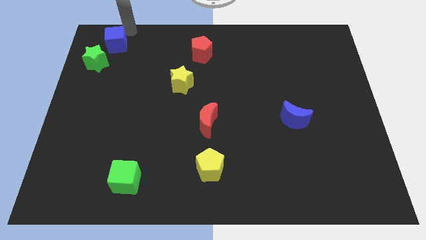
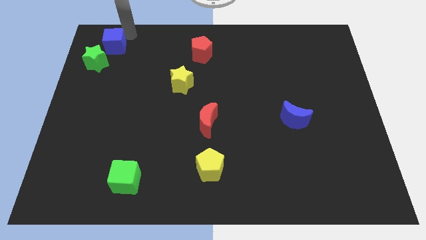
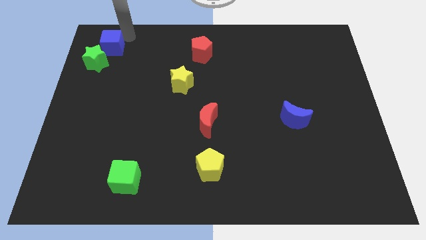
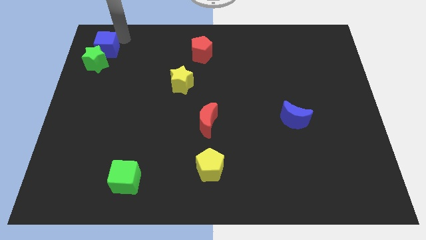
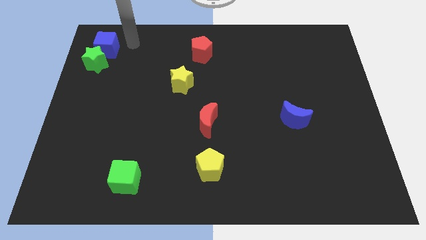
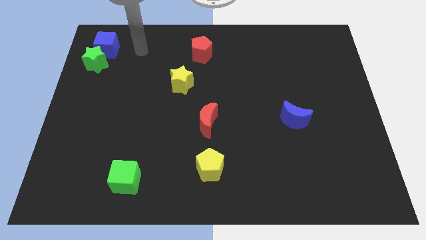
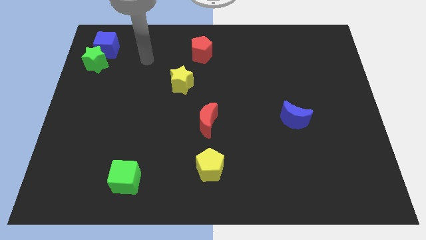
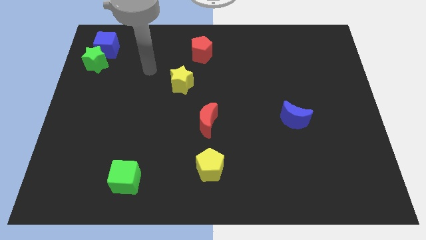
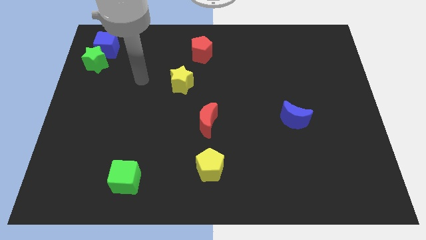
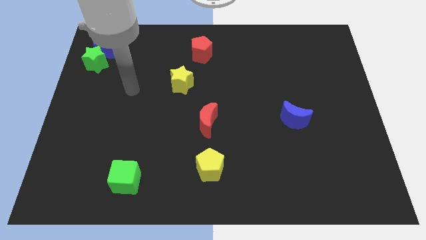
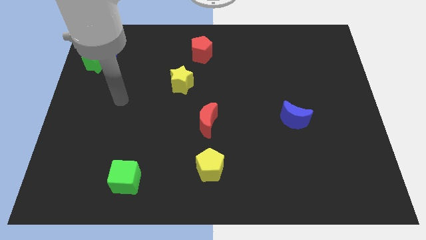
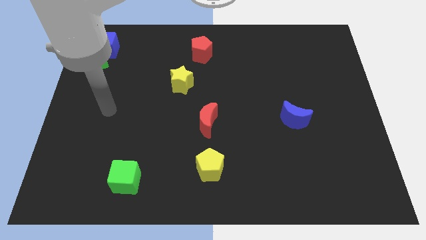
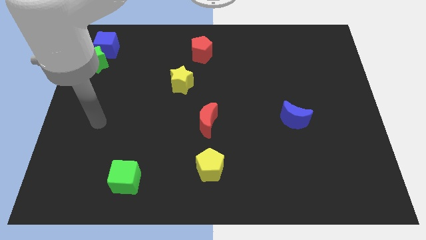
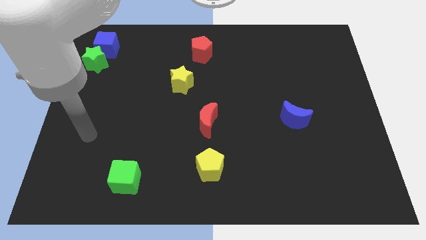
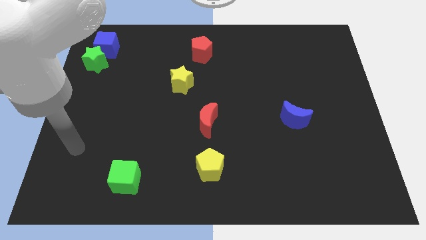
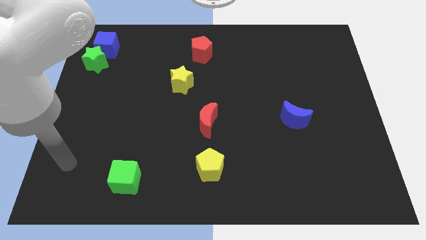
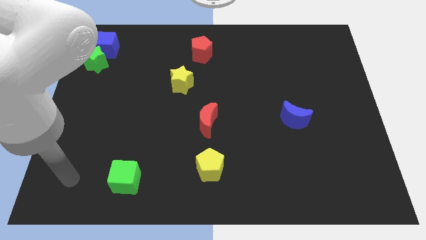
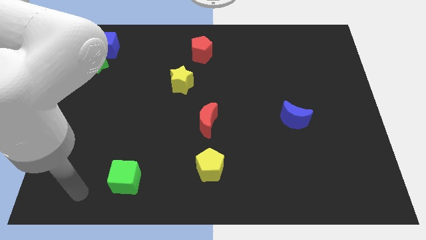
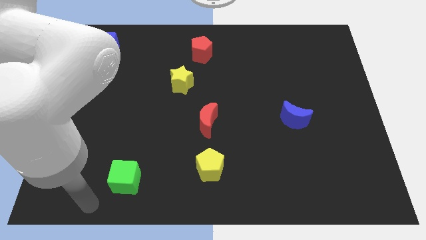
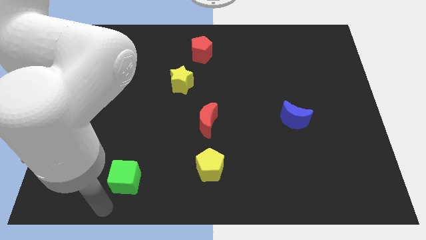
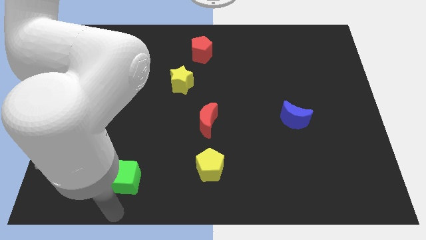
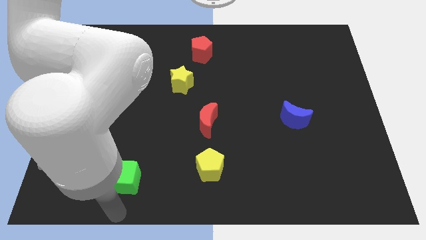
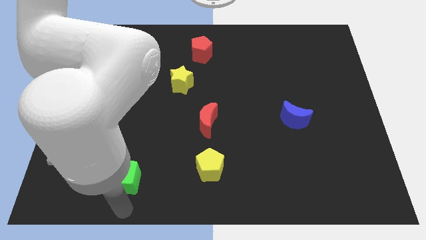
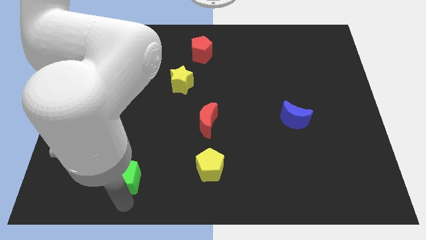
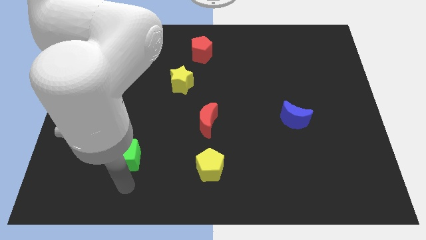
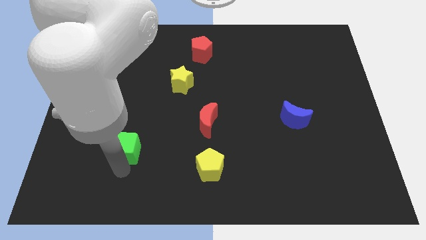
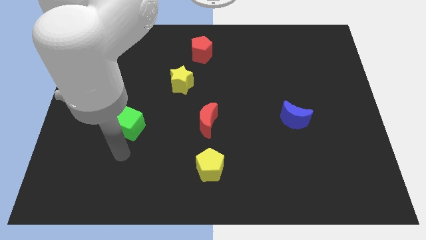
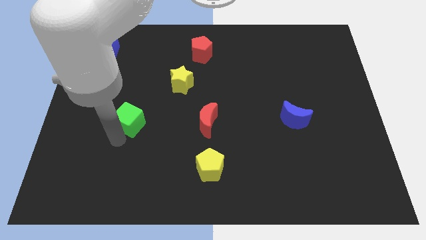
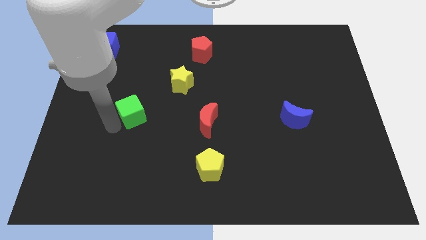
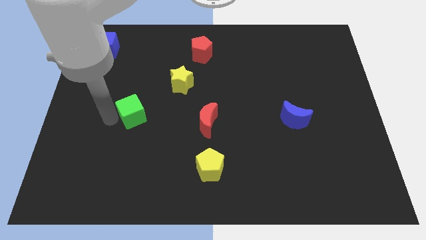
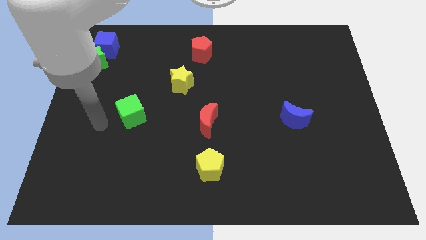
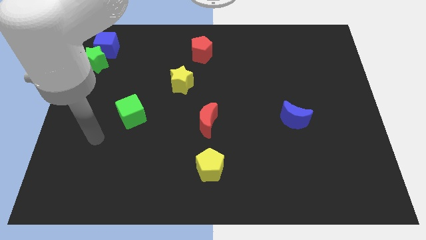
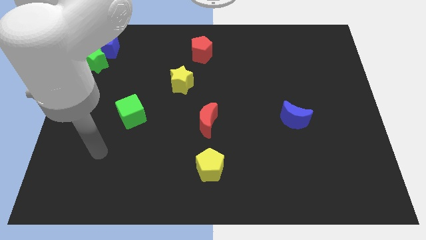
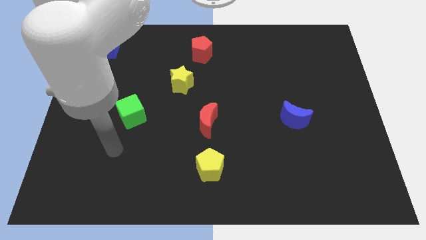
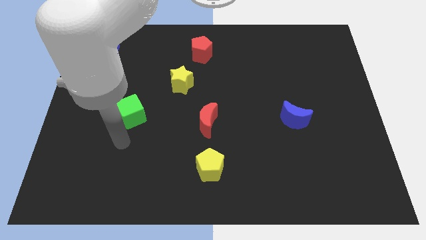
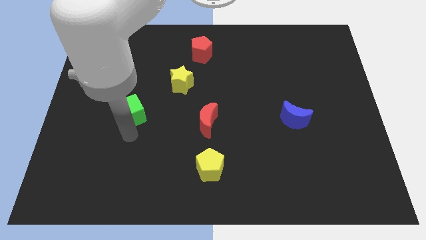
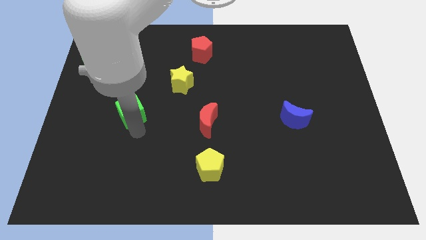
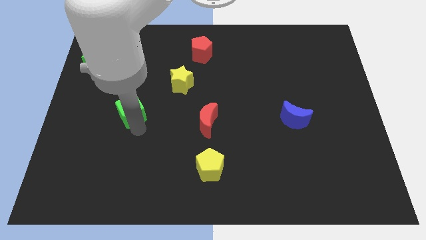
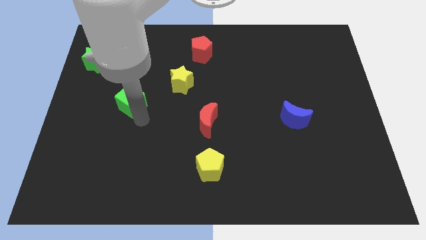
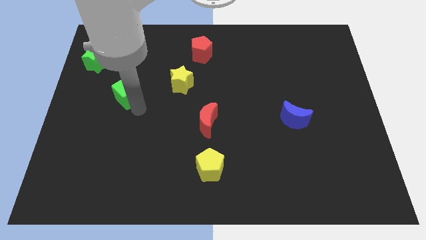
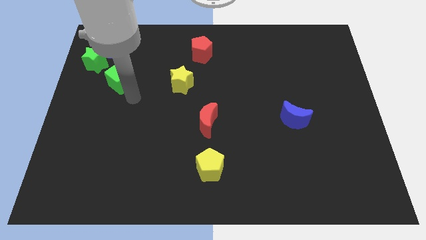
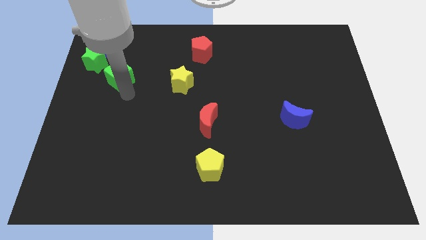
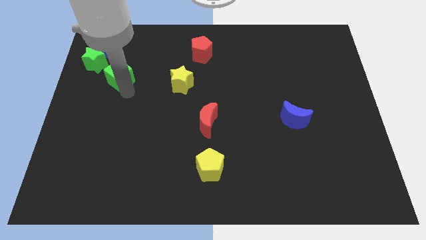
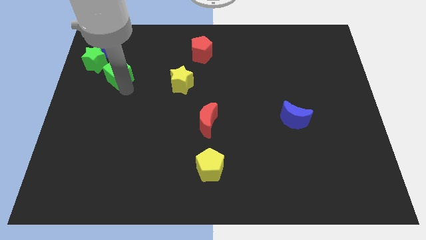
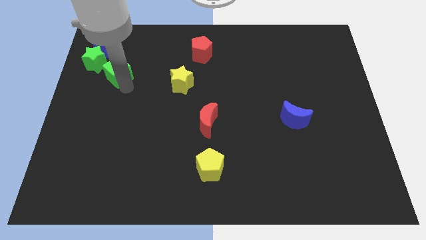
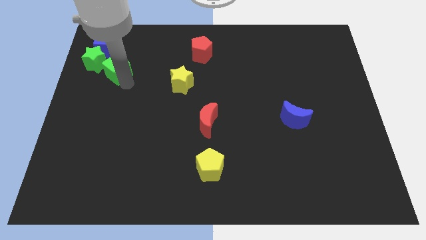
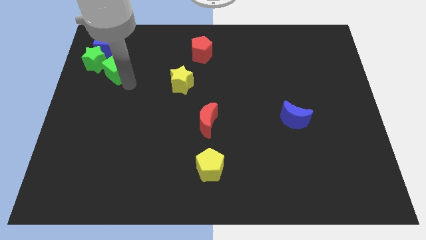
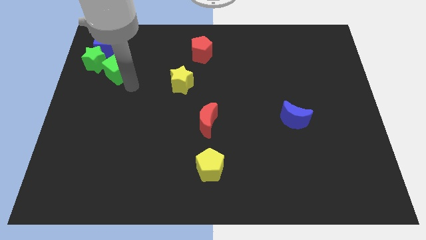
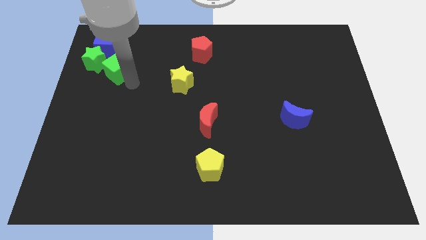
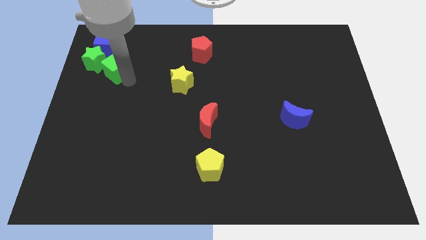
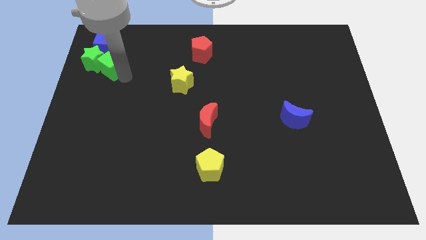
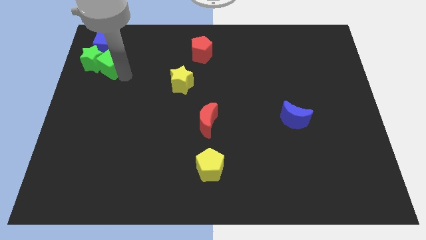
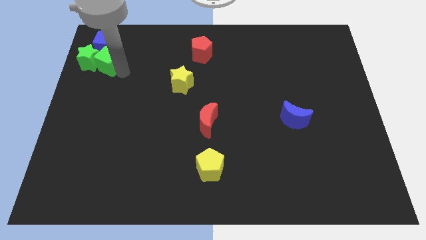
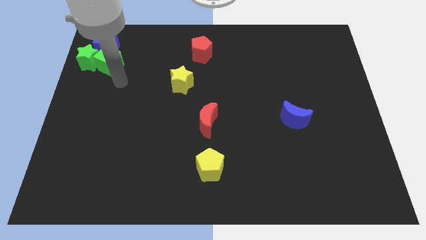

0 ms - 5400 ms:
push the green cube into the green star

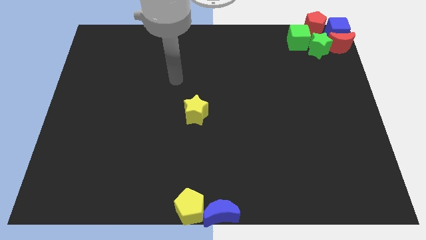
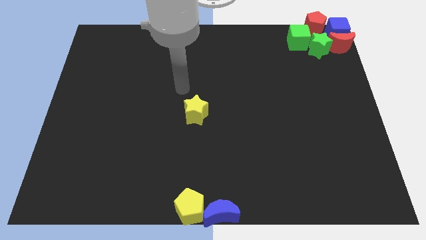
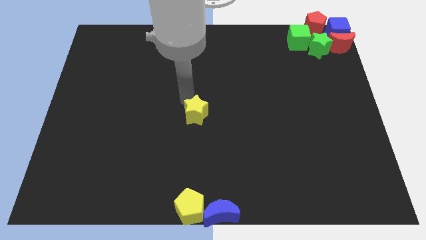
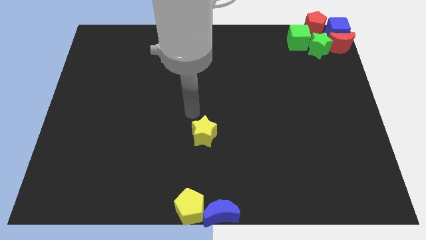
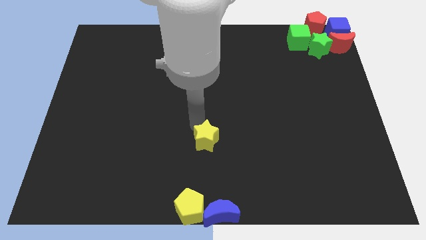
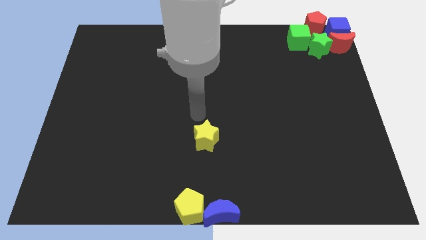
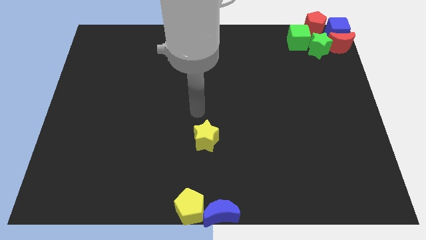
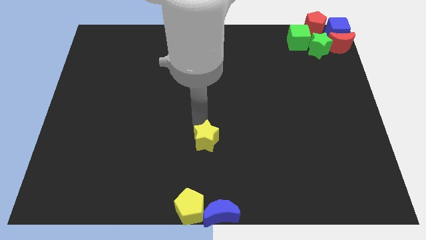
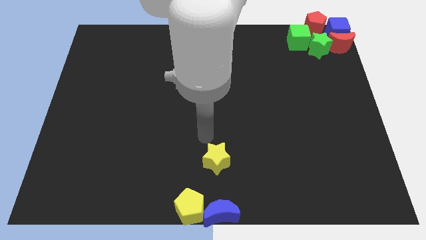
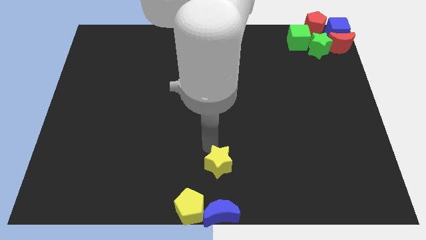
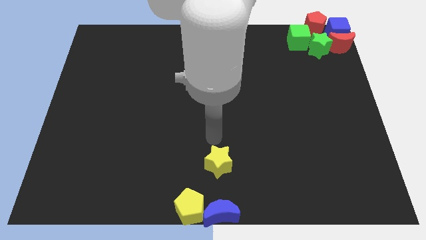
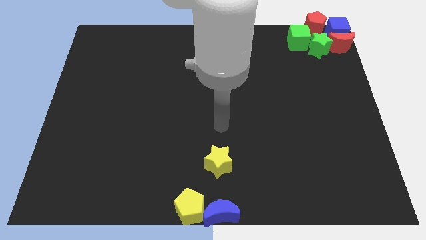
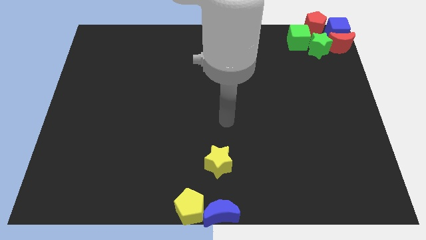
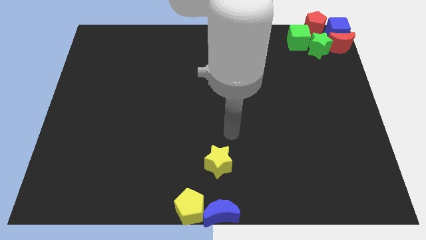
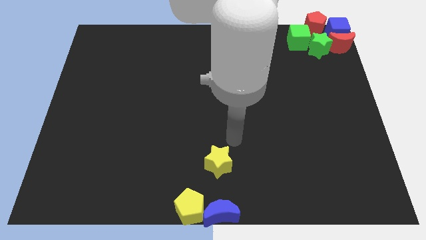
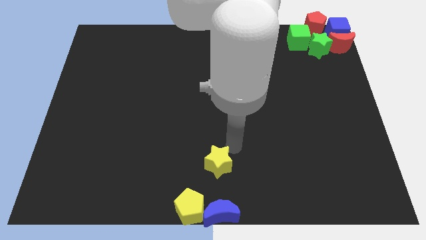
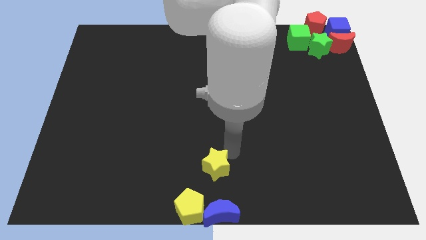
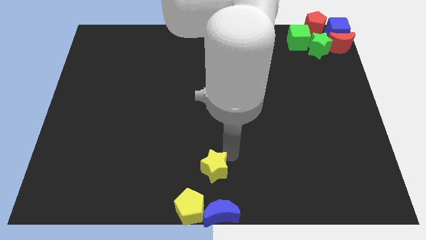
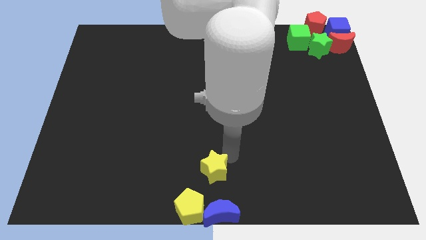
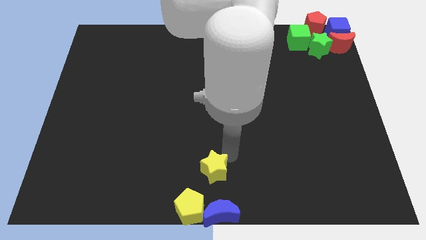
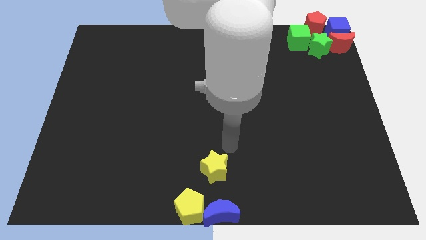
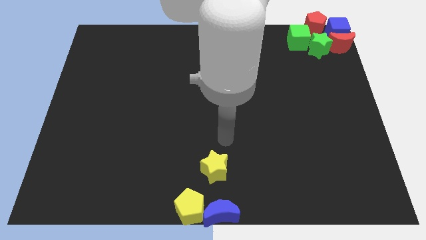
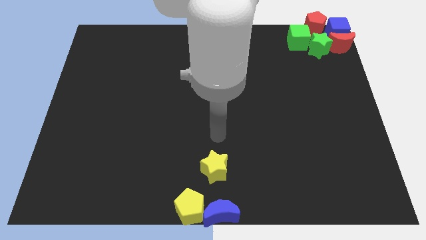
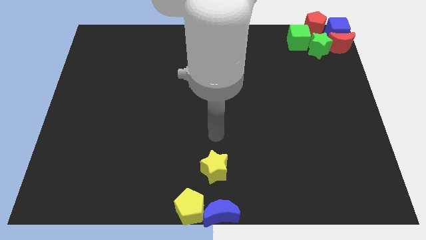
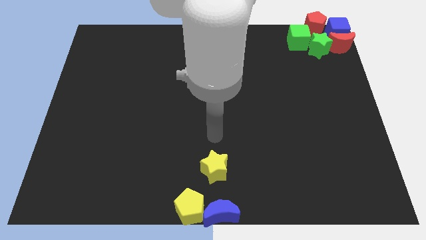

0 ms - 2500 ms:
move the yellow star above the blue crescent

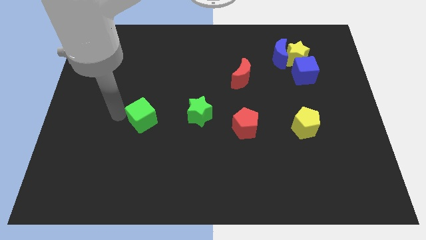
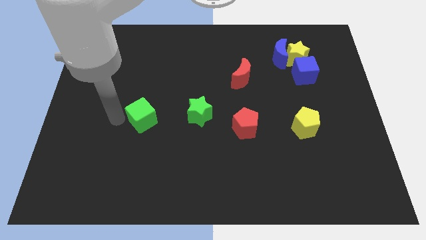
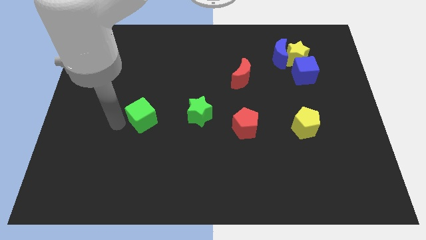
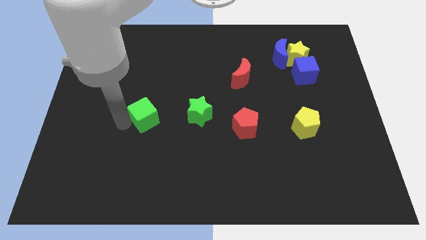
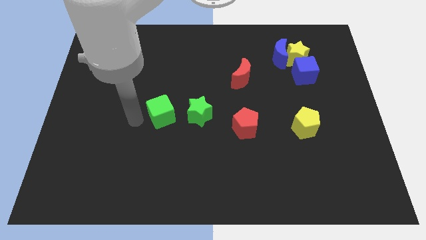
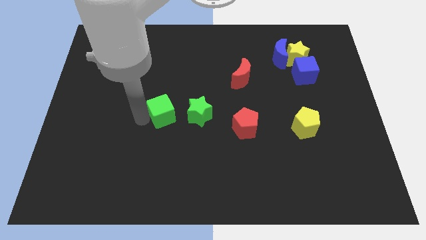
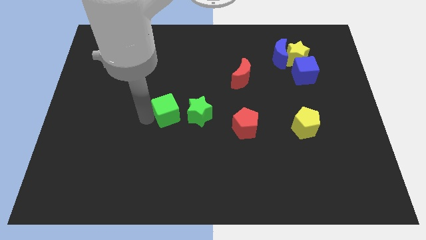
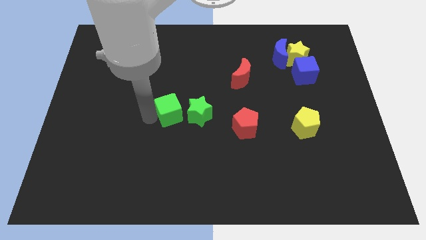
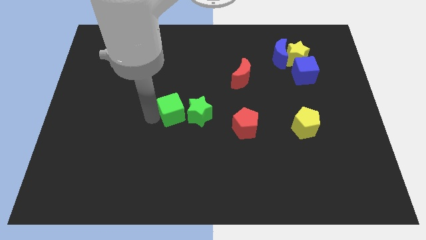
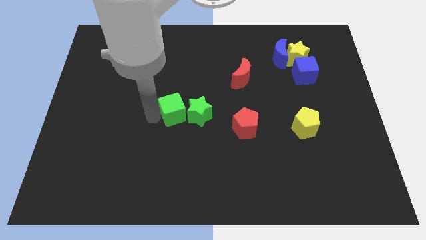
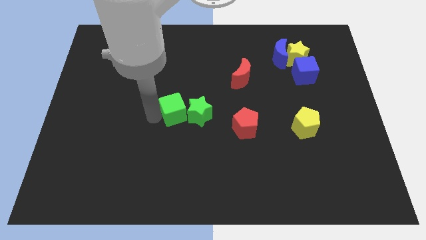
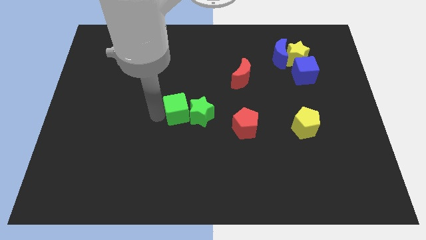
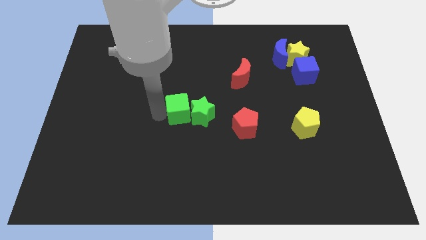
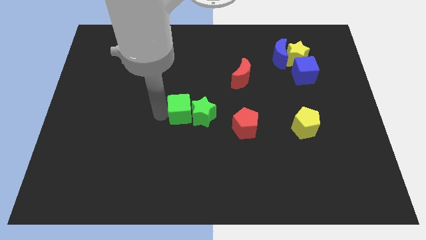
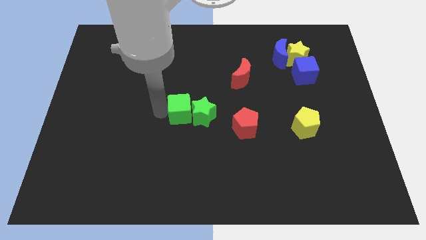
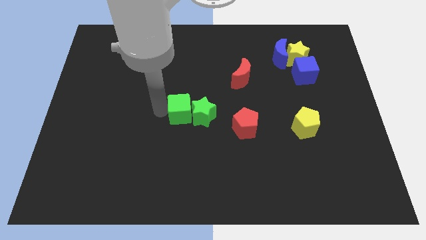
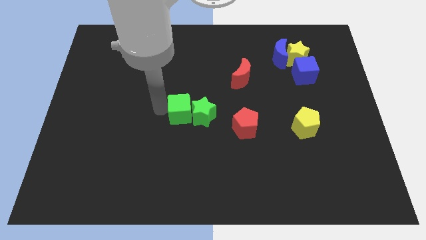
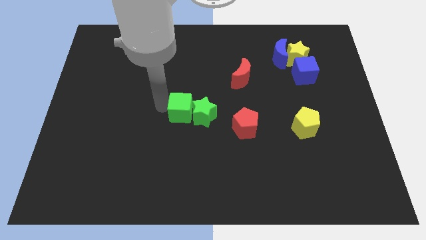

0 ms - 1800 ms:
push green cube on the left side of the green star
